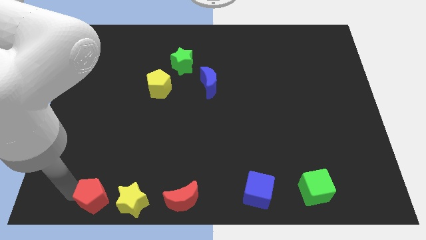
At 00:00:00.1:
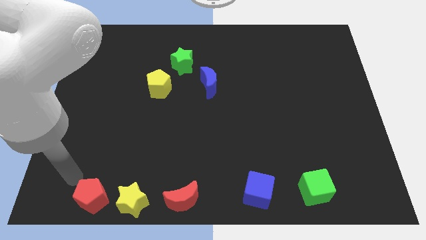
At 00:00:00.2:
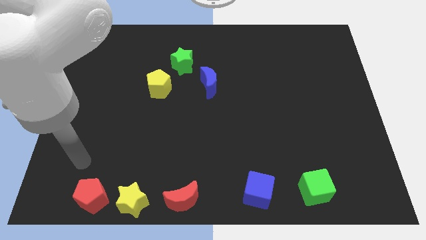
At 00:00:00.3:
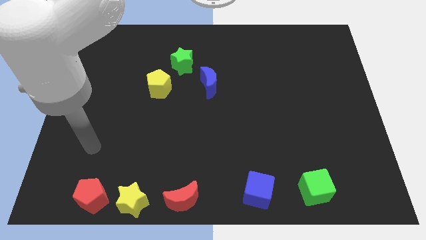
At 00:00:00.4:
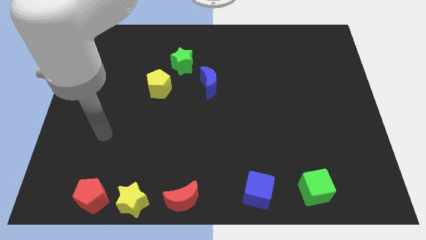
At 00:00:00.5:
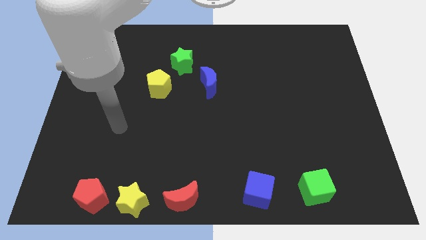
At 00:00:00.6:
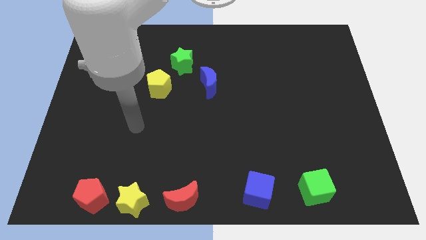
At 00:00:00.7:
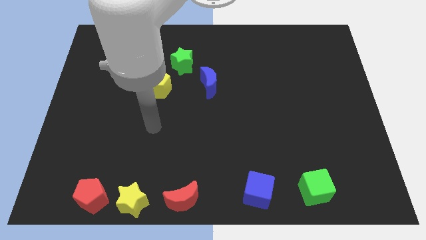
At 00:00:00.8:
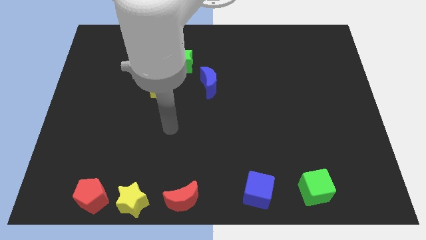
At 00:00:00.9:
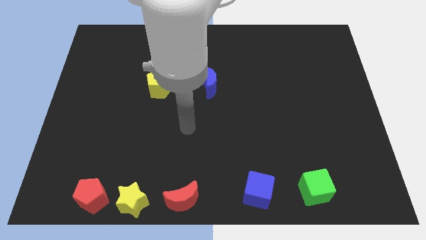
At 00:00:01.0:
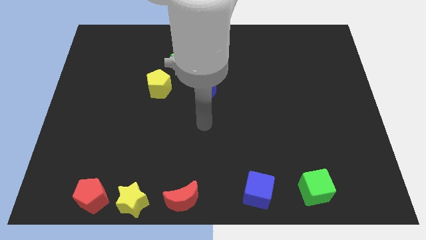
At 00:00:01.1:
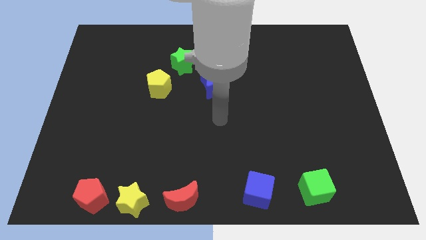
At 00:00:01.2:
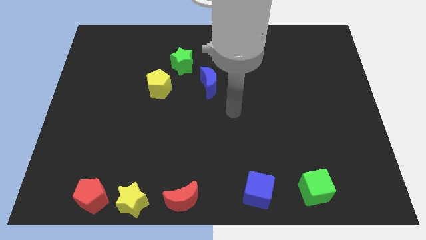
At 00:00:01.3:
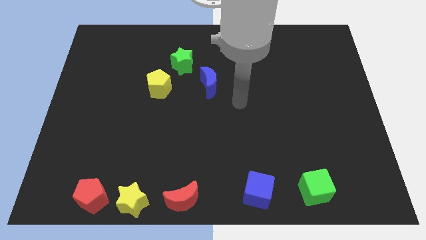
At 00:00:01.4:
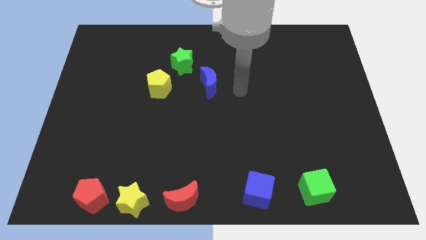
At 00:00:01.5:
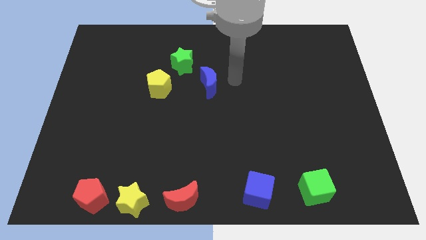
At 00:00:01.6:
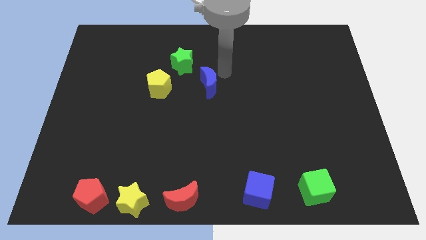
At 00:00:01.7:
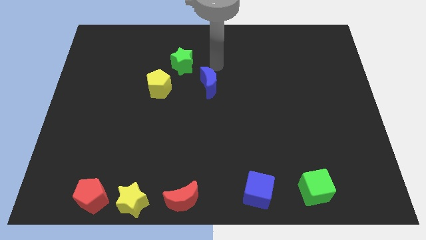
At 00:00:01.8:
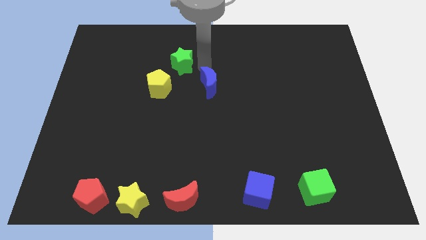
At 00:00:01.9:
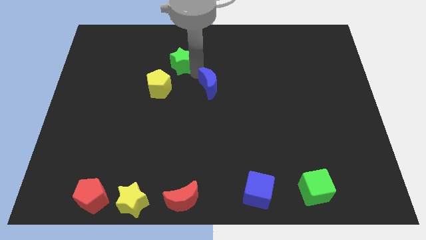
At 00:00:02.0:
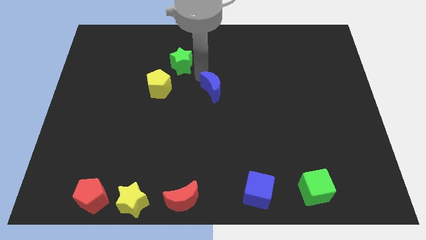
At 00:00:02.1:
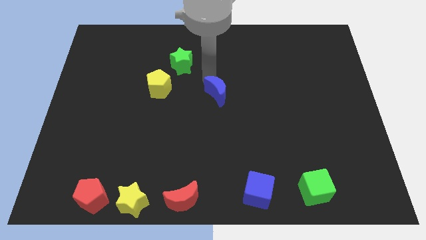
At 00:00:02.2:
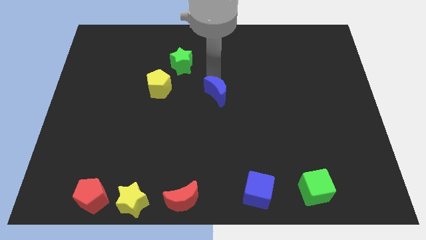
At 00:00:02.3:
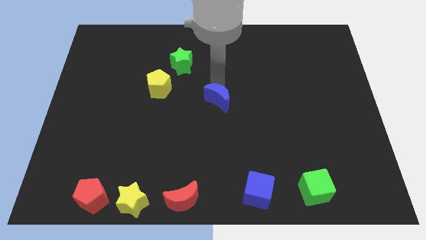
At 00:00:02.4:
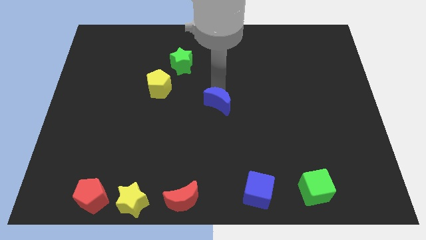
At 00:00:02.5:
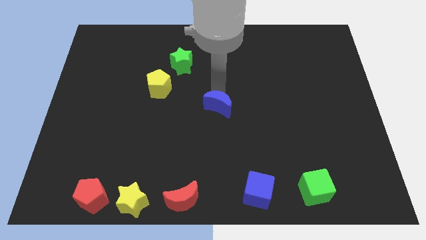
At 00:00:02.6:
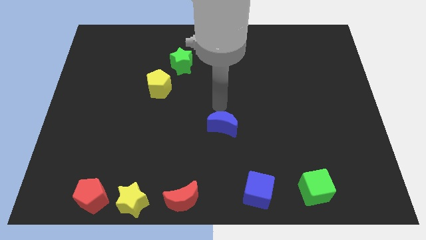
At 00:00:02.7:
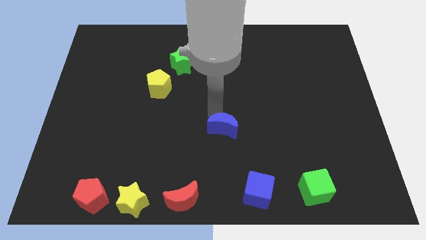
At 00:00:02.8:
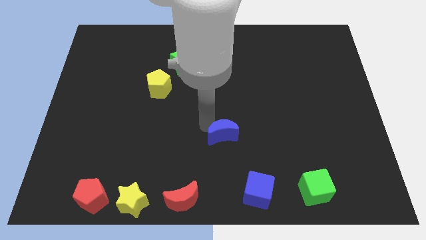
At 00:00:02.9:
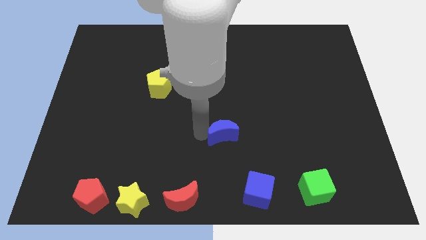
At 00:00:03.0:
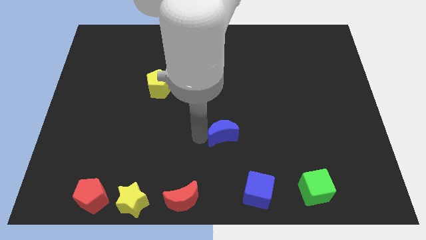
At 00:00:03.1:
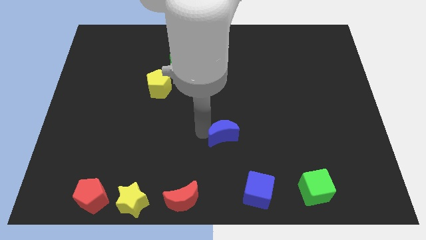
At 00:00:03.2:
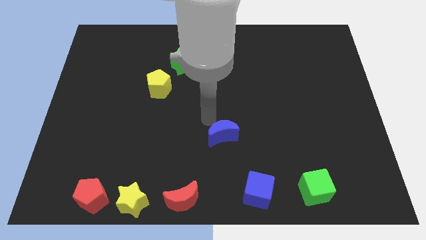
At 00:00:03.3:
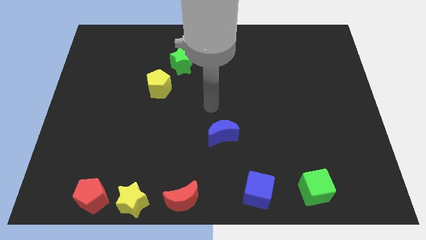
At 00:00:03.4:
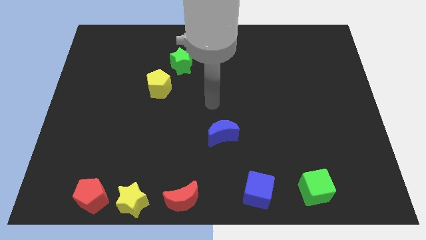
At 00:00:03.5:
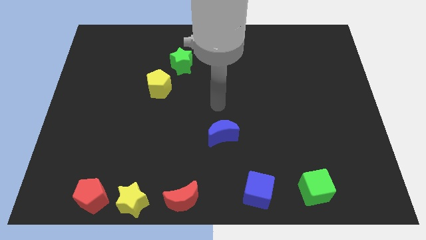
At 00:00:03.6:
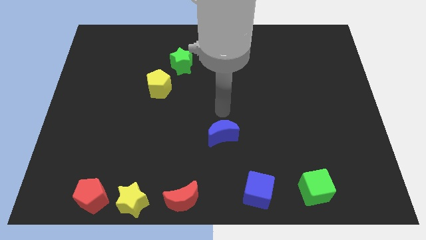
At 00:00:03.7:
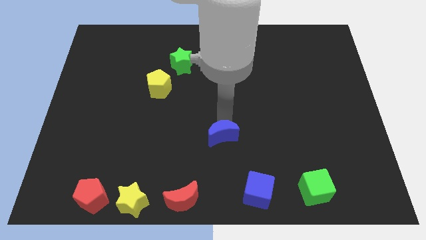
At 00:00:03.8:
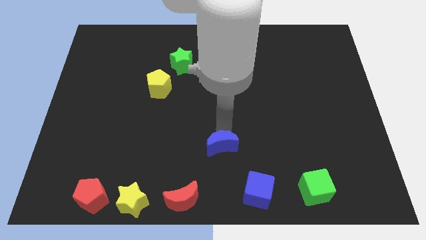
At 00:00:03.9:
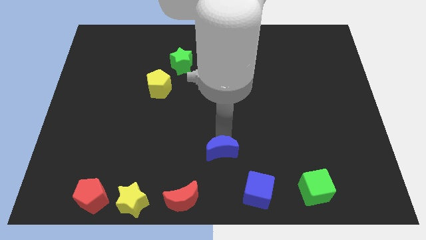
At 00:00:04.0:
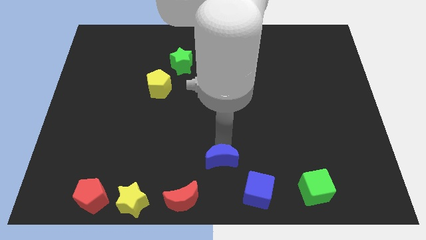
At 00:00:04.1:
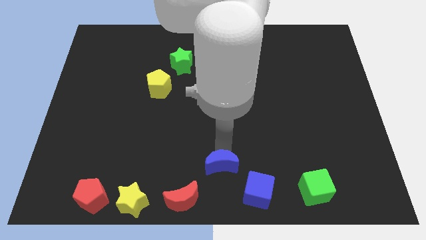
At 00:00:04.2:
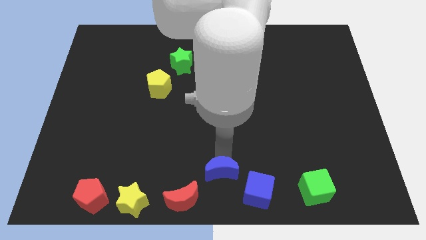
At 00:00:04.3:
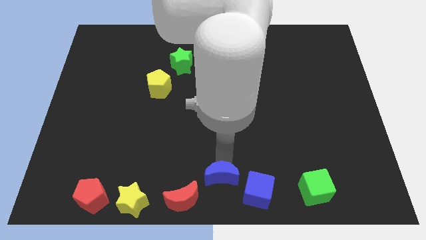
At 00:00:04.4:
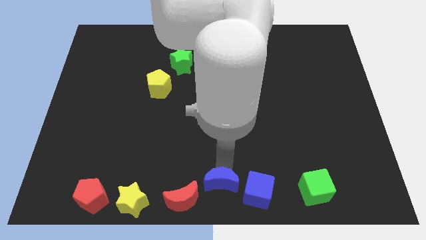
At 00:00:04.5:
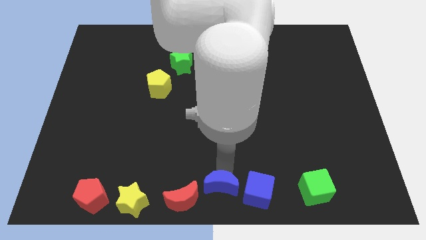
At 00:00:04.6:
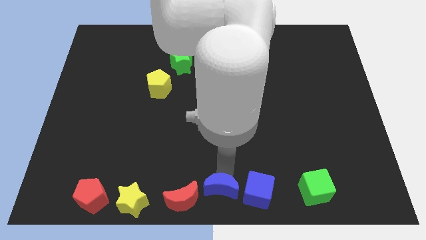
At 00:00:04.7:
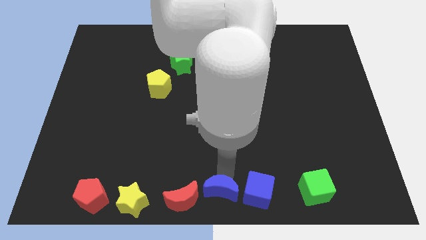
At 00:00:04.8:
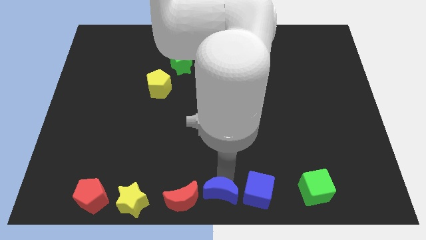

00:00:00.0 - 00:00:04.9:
push the blue crescent to the right of the red crescent

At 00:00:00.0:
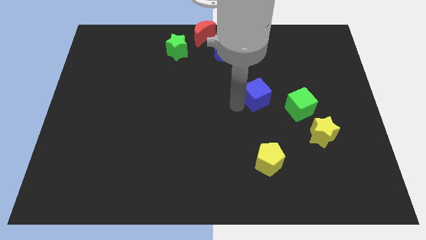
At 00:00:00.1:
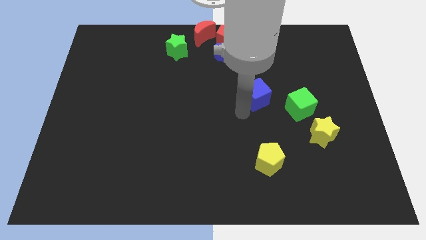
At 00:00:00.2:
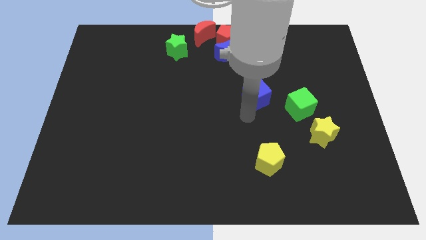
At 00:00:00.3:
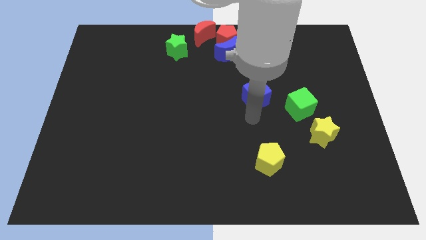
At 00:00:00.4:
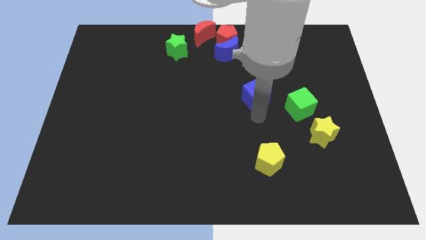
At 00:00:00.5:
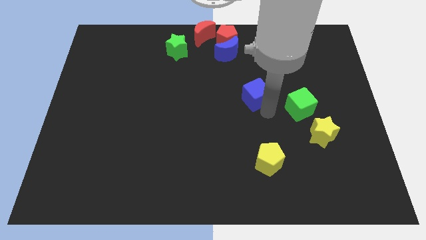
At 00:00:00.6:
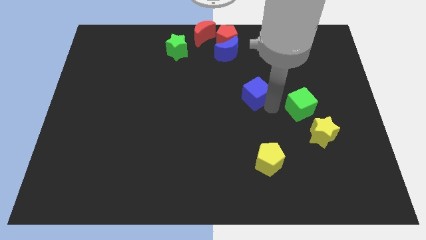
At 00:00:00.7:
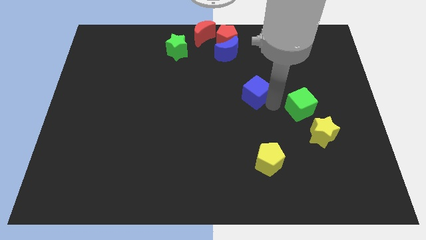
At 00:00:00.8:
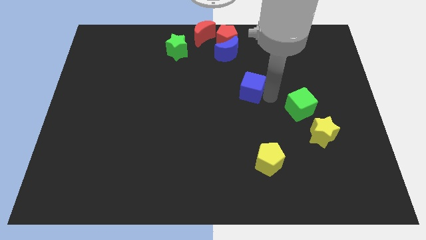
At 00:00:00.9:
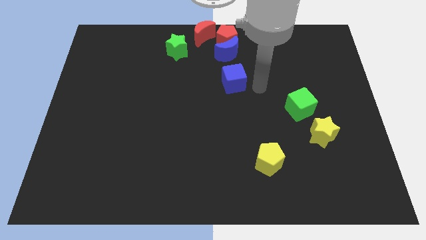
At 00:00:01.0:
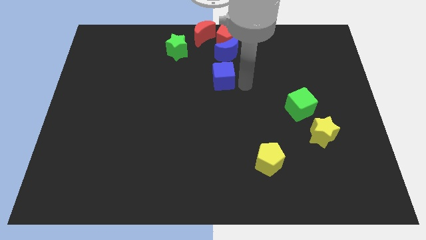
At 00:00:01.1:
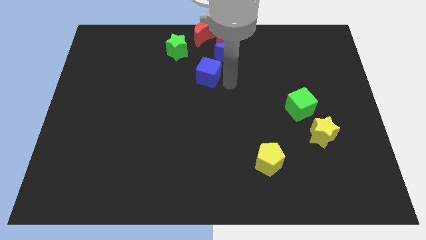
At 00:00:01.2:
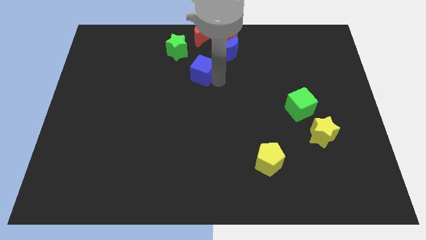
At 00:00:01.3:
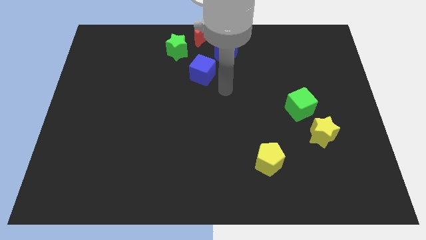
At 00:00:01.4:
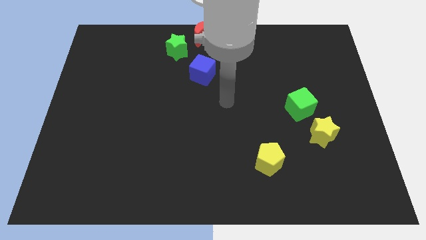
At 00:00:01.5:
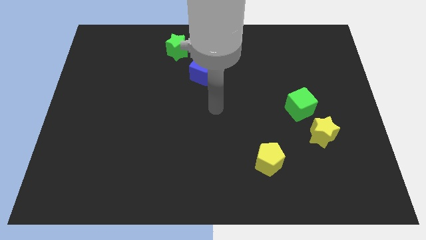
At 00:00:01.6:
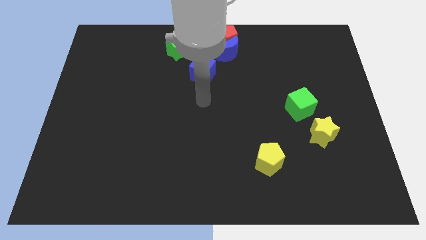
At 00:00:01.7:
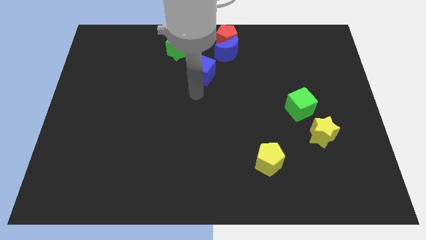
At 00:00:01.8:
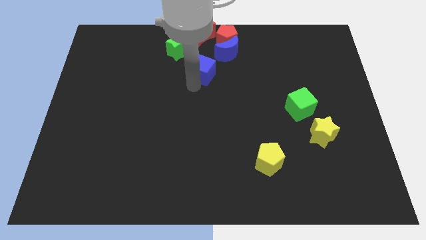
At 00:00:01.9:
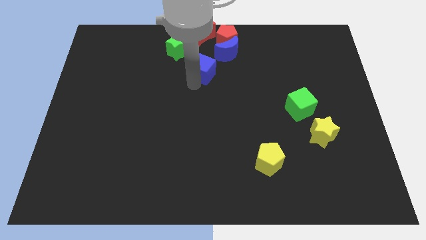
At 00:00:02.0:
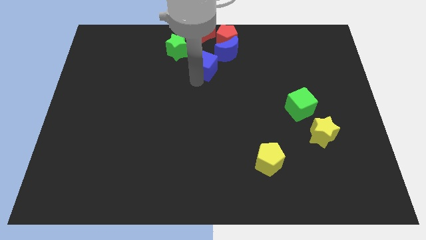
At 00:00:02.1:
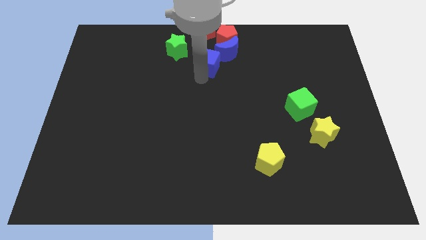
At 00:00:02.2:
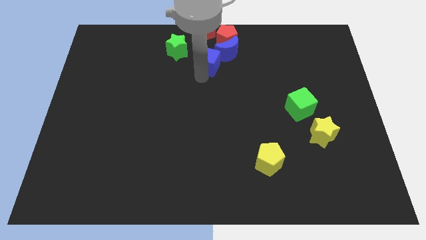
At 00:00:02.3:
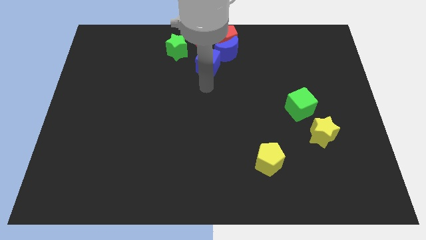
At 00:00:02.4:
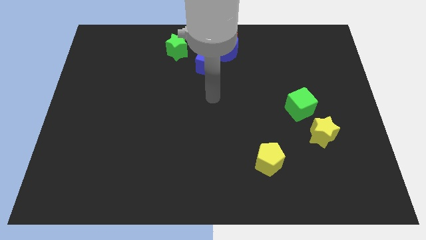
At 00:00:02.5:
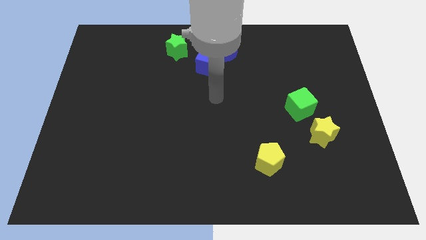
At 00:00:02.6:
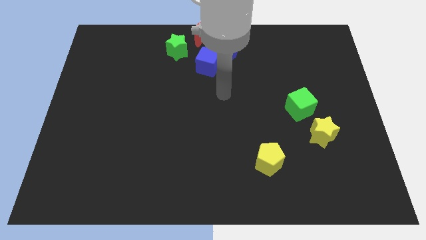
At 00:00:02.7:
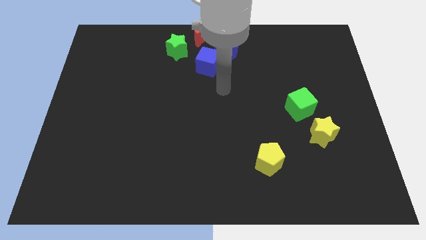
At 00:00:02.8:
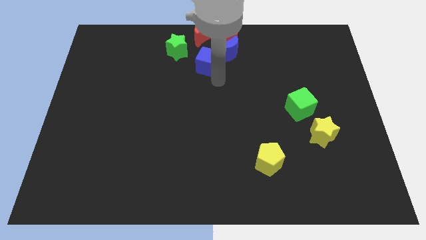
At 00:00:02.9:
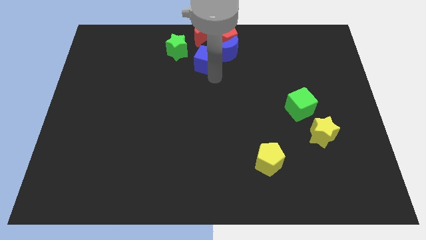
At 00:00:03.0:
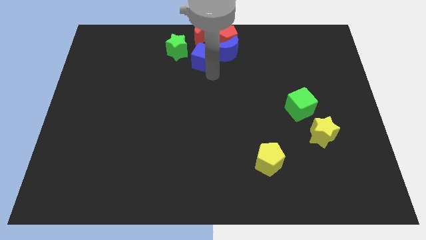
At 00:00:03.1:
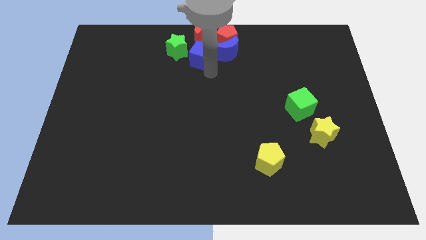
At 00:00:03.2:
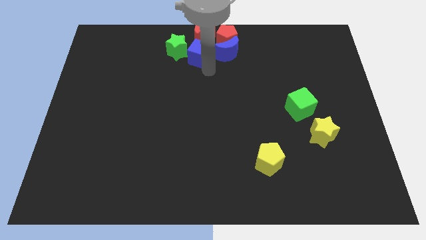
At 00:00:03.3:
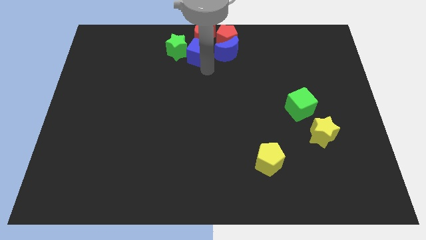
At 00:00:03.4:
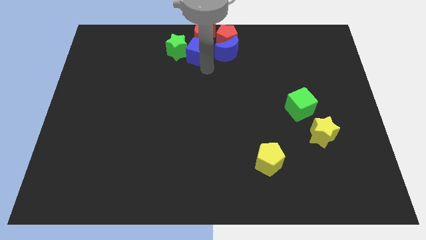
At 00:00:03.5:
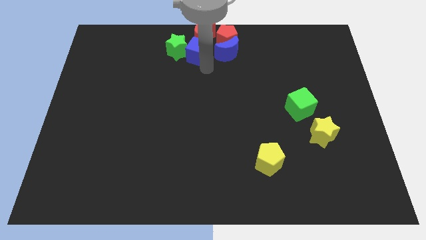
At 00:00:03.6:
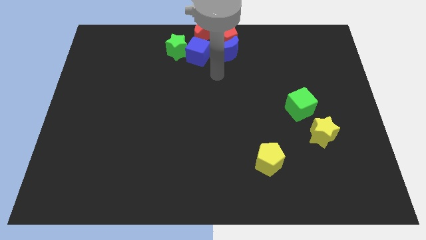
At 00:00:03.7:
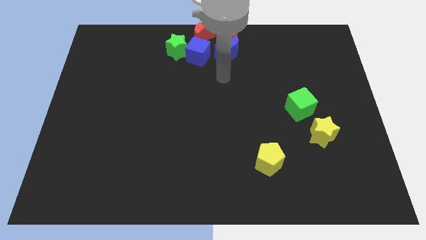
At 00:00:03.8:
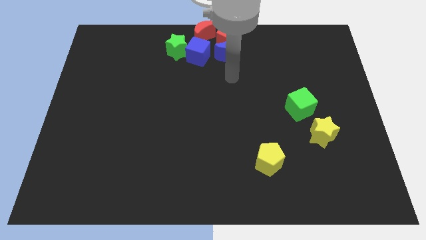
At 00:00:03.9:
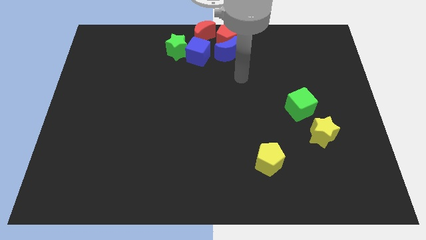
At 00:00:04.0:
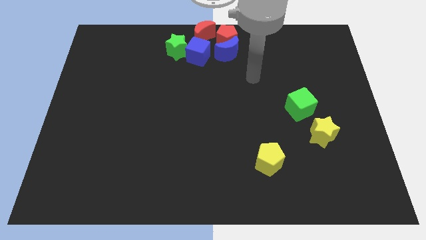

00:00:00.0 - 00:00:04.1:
place the blue cube in between the green star and the blue moon
